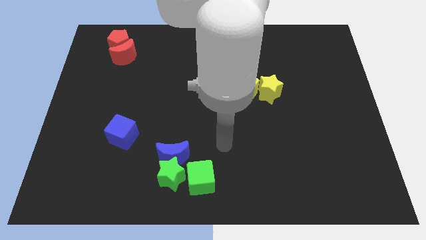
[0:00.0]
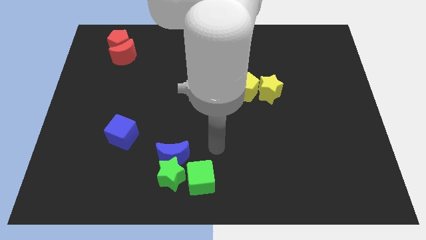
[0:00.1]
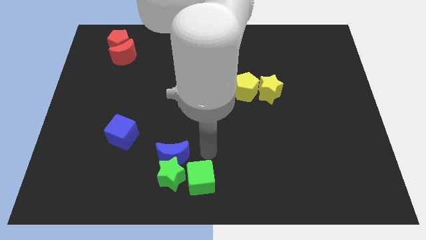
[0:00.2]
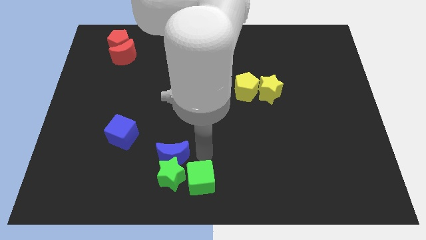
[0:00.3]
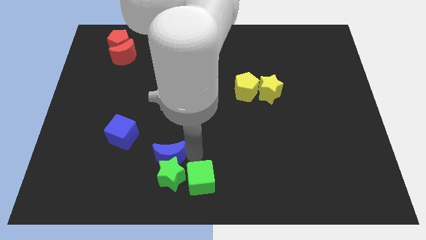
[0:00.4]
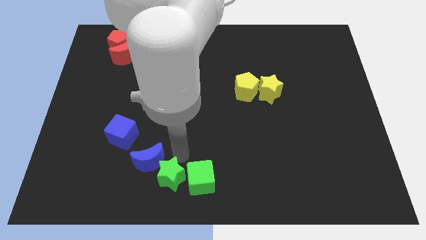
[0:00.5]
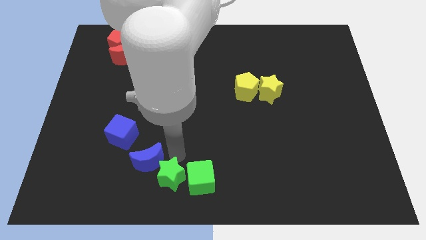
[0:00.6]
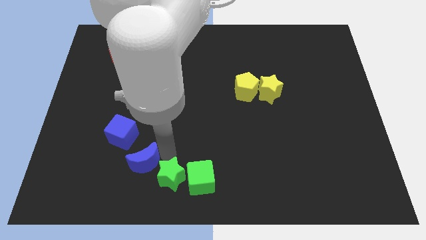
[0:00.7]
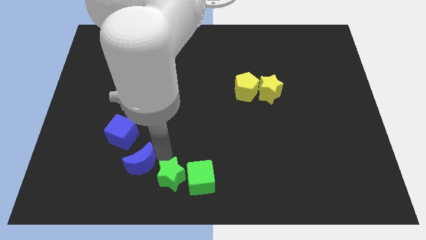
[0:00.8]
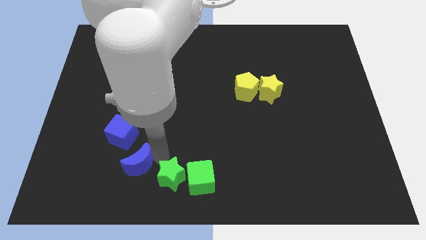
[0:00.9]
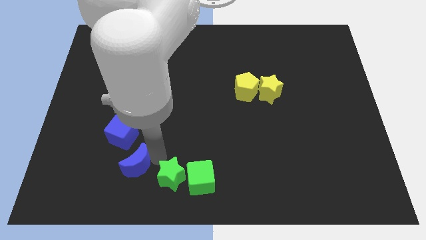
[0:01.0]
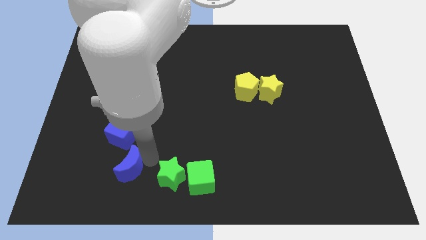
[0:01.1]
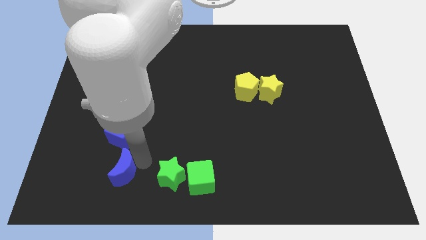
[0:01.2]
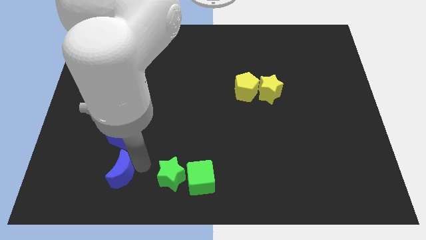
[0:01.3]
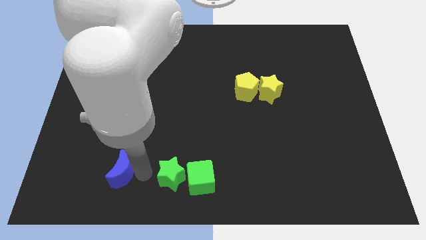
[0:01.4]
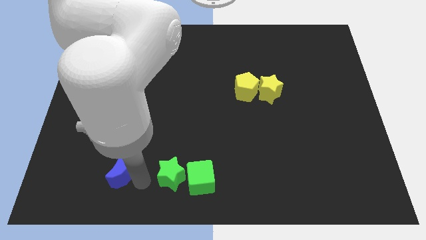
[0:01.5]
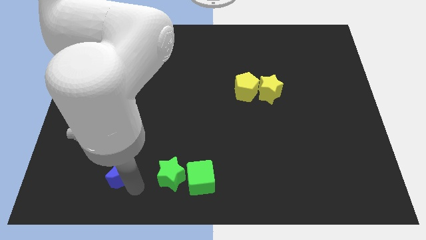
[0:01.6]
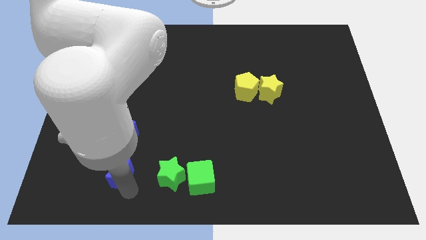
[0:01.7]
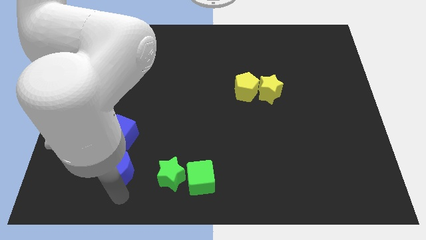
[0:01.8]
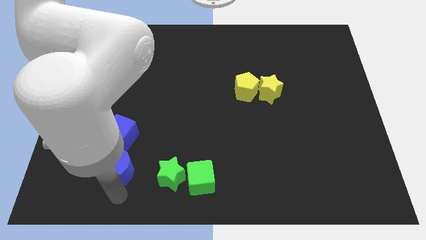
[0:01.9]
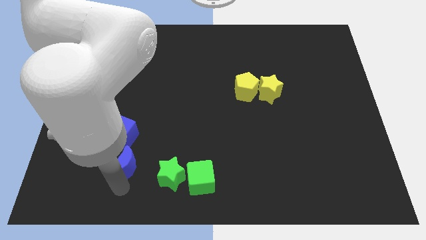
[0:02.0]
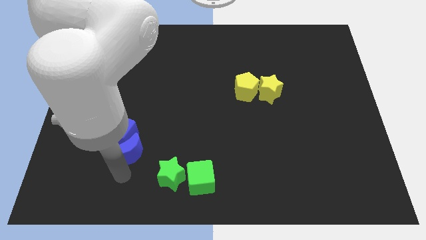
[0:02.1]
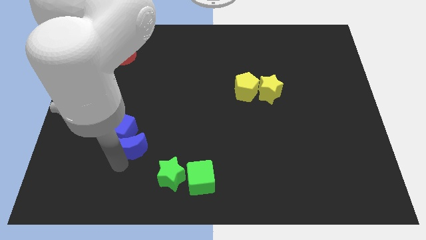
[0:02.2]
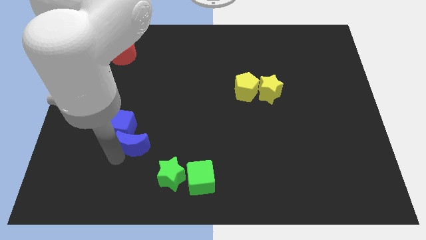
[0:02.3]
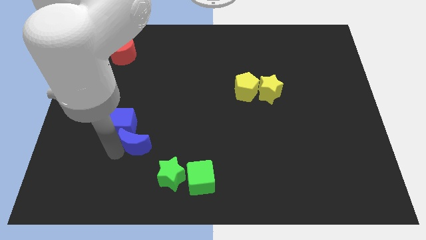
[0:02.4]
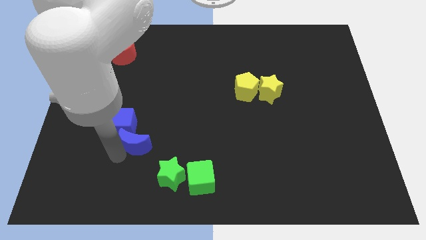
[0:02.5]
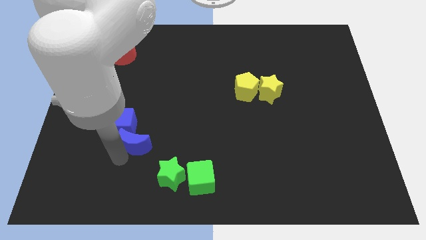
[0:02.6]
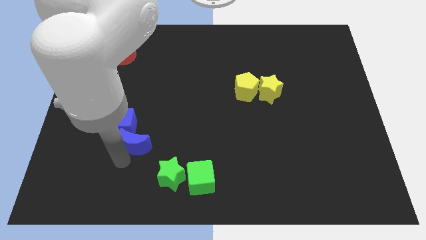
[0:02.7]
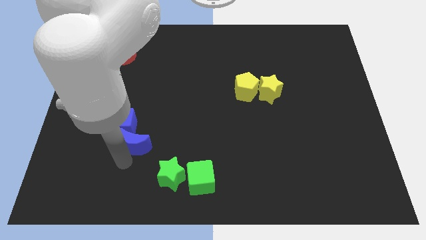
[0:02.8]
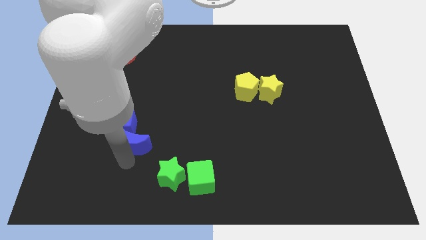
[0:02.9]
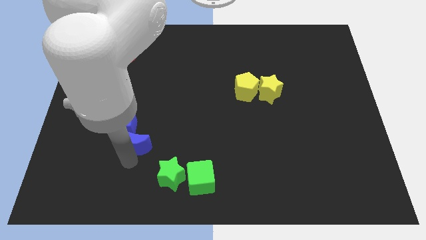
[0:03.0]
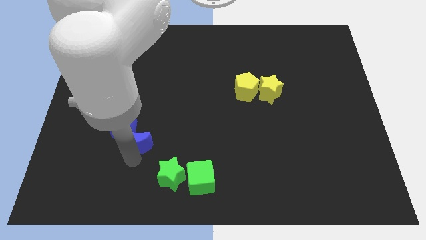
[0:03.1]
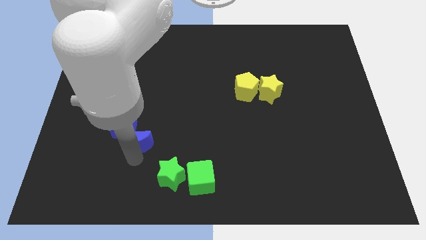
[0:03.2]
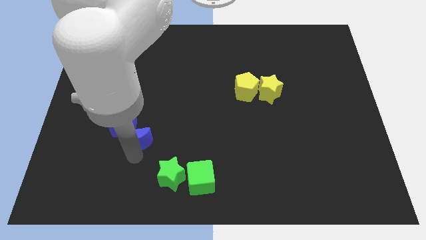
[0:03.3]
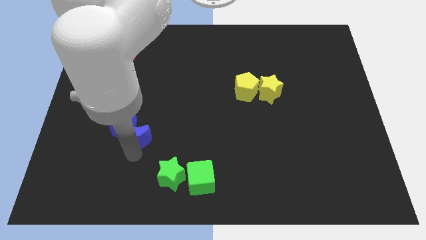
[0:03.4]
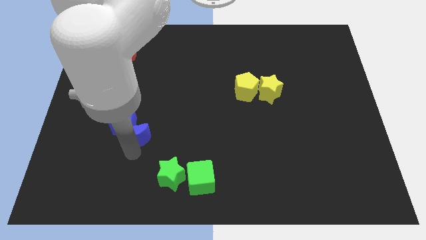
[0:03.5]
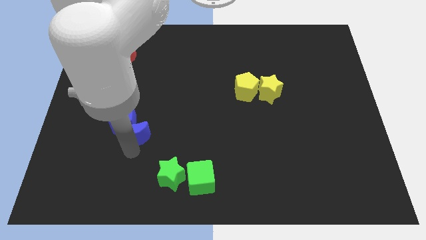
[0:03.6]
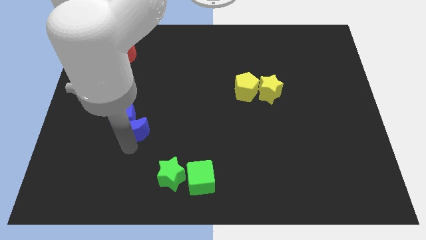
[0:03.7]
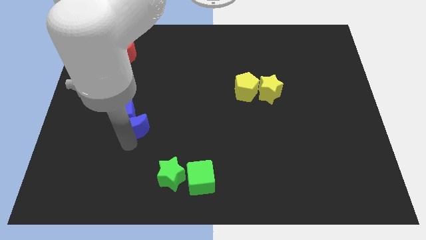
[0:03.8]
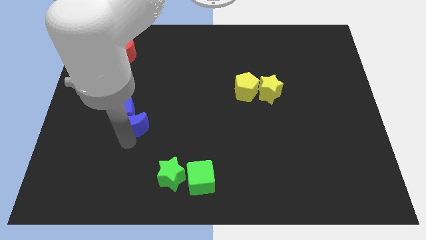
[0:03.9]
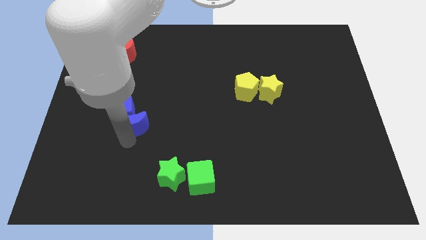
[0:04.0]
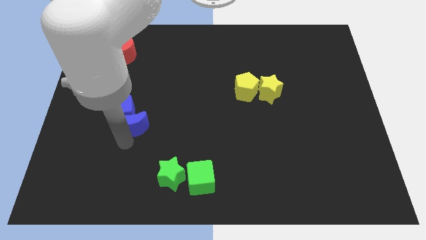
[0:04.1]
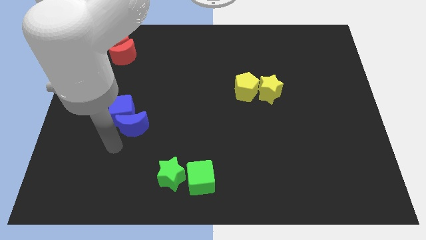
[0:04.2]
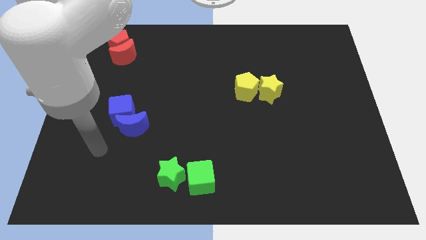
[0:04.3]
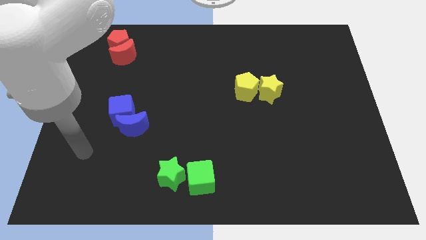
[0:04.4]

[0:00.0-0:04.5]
place blue moon below the blue cube

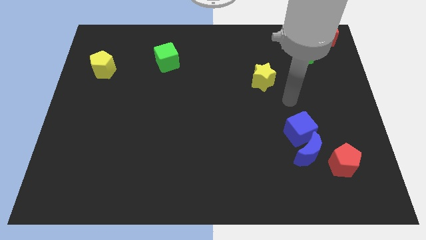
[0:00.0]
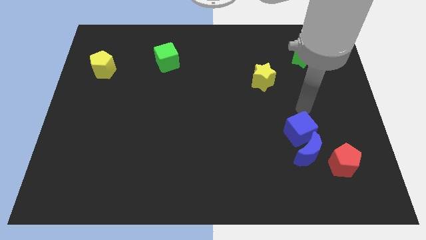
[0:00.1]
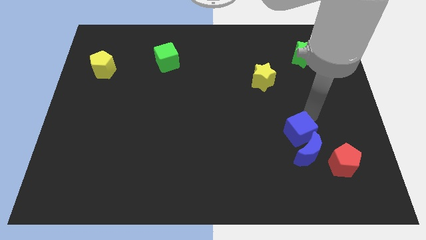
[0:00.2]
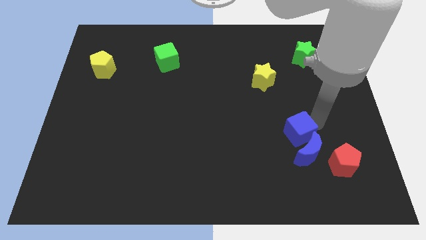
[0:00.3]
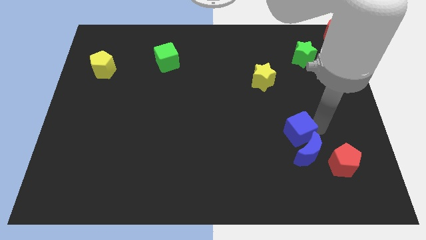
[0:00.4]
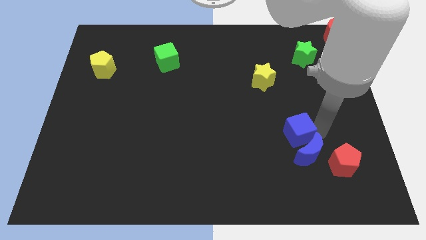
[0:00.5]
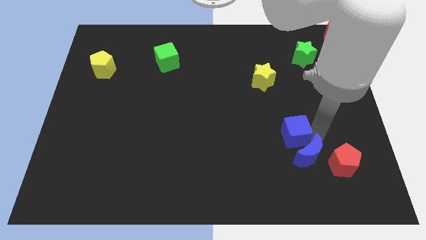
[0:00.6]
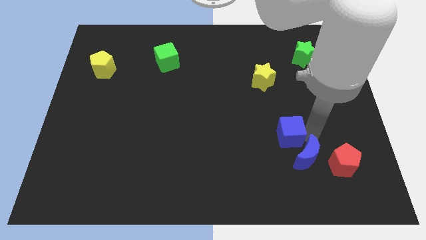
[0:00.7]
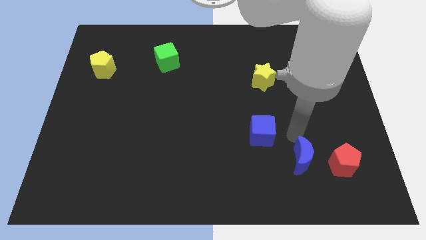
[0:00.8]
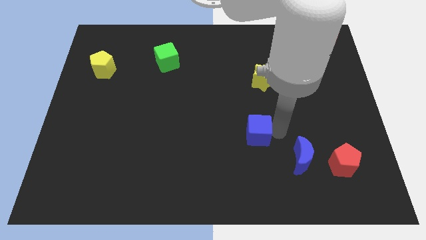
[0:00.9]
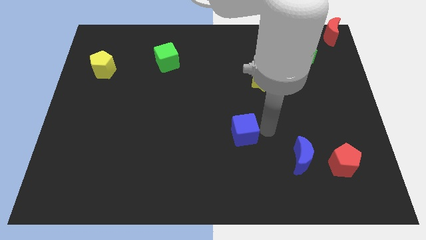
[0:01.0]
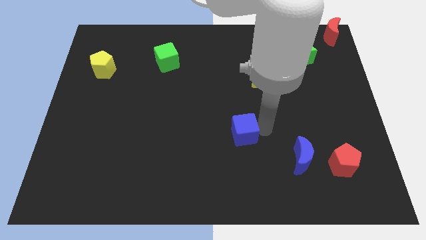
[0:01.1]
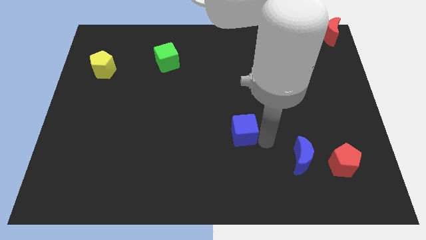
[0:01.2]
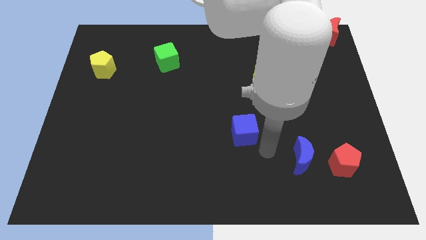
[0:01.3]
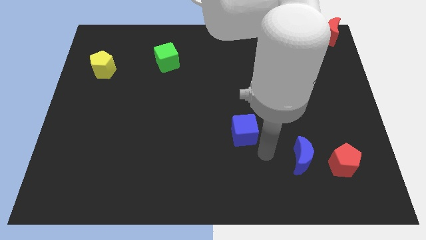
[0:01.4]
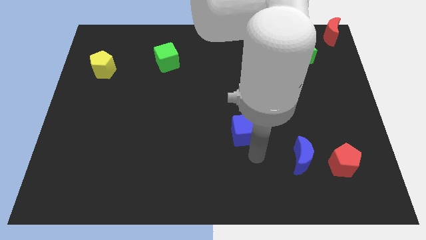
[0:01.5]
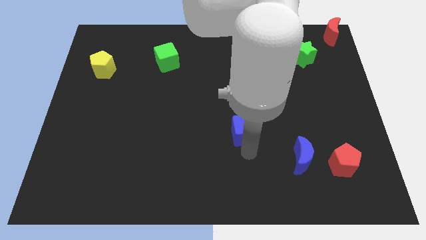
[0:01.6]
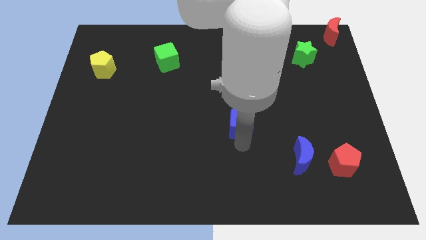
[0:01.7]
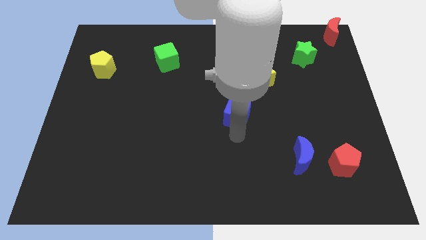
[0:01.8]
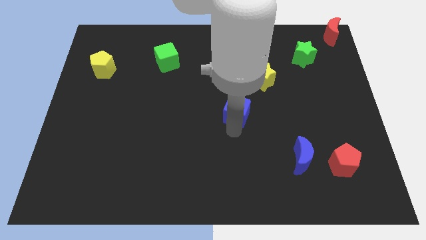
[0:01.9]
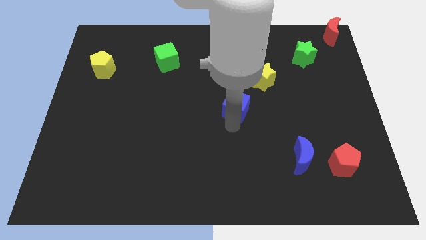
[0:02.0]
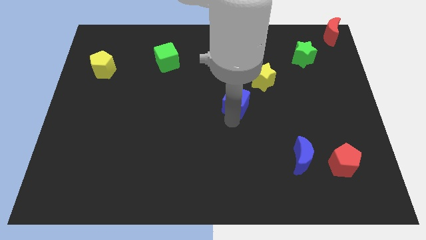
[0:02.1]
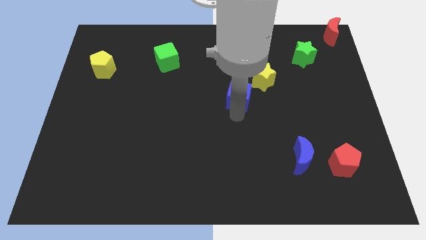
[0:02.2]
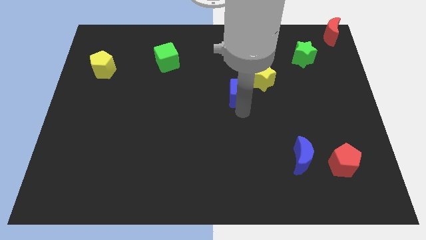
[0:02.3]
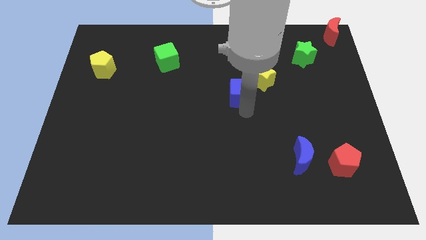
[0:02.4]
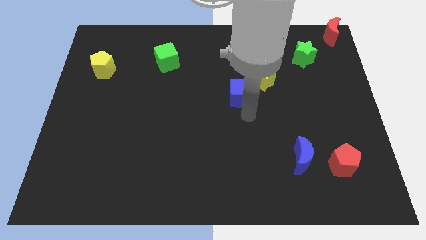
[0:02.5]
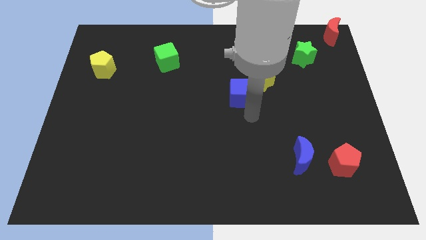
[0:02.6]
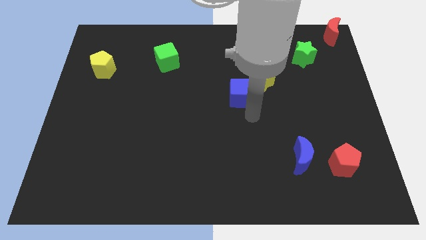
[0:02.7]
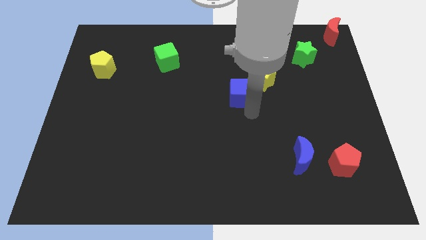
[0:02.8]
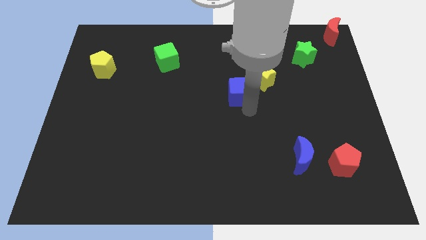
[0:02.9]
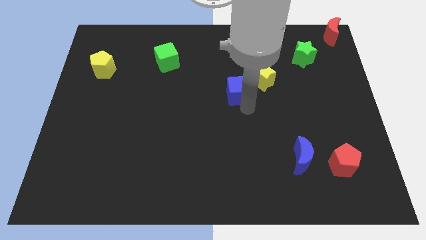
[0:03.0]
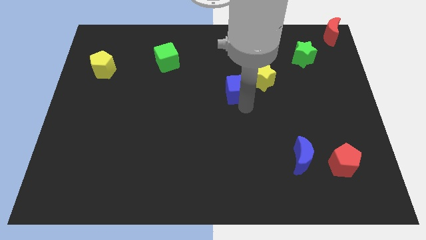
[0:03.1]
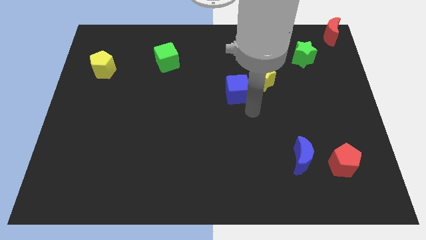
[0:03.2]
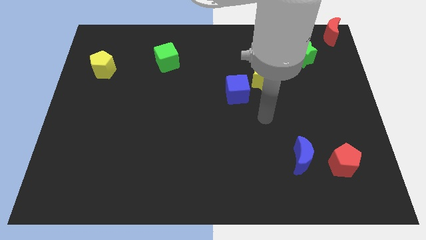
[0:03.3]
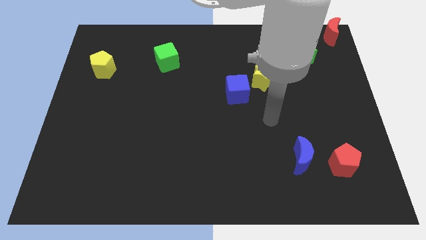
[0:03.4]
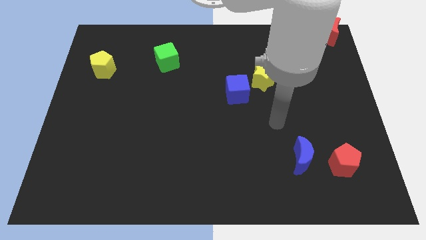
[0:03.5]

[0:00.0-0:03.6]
separate the blue cube from the blue crescent

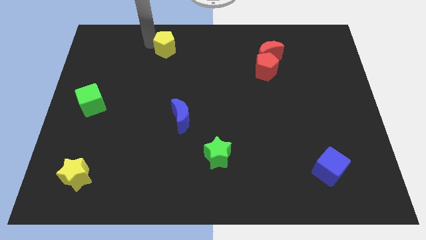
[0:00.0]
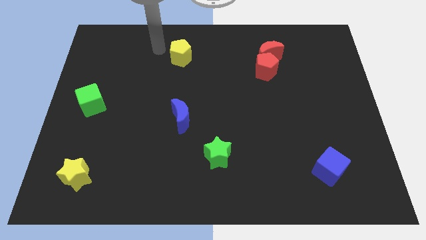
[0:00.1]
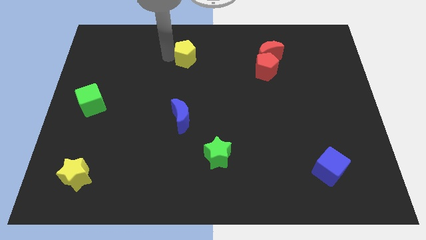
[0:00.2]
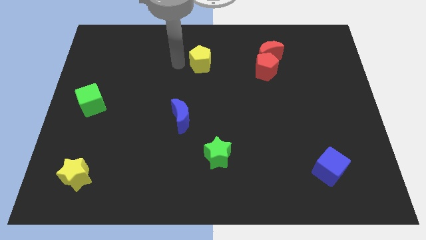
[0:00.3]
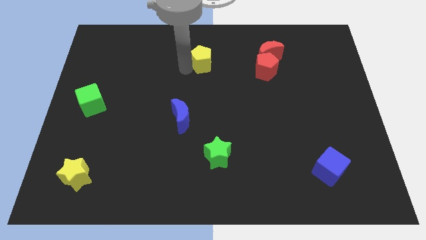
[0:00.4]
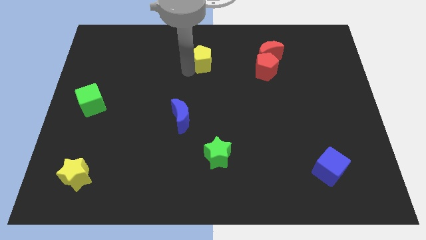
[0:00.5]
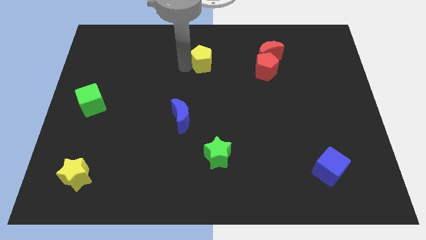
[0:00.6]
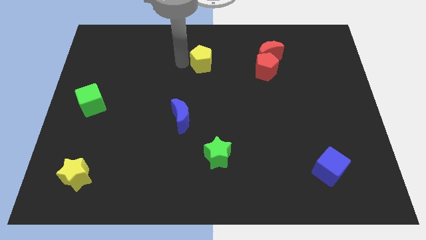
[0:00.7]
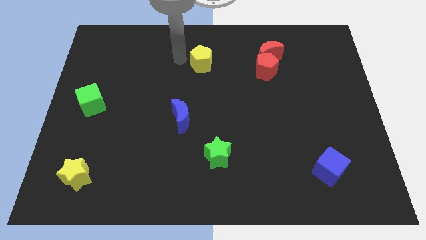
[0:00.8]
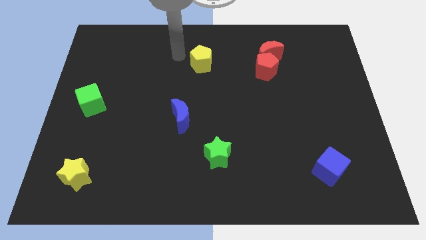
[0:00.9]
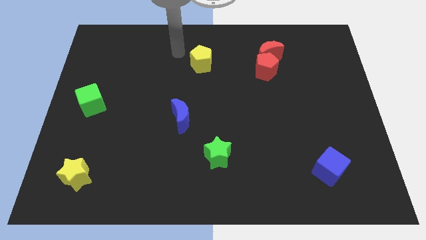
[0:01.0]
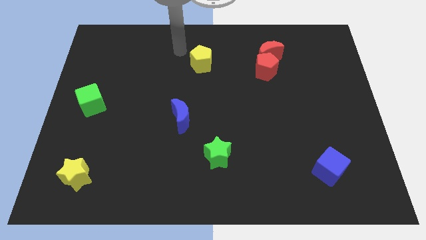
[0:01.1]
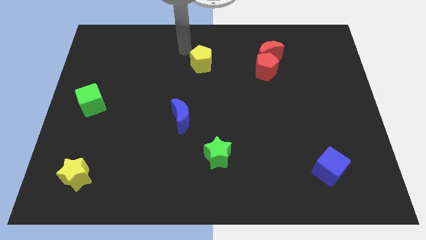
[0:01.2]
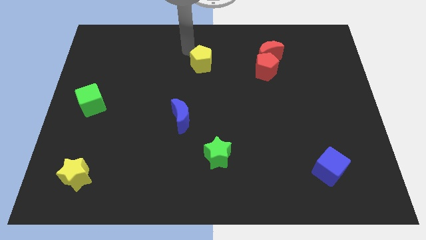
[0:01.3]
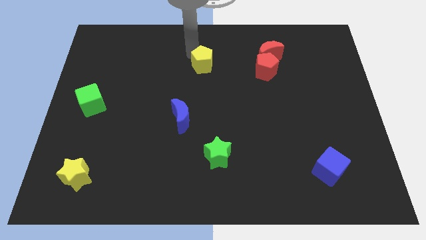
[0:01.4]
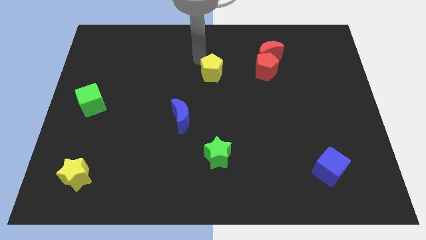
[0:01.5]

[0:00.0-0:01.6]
push the yellow pentagon to the left of the red pentagon
